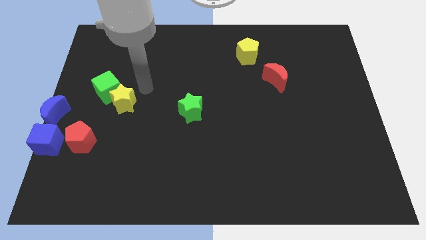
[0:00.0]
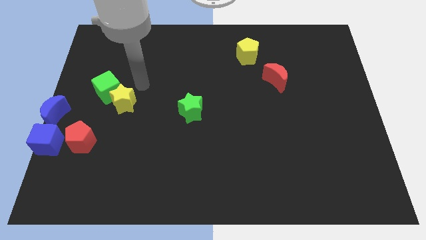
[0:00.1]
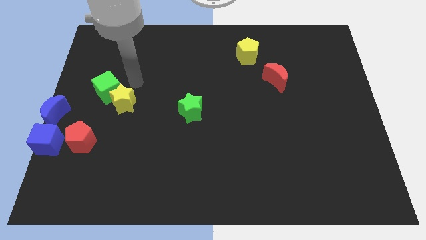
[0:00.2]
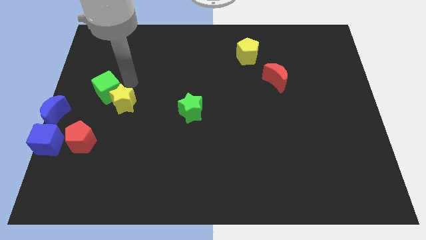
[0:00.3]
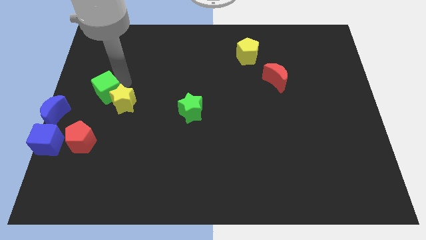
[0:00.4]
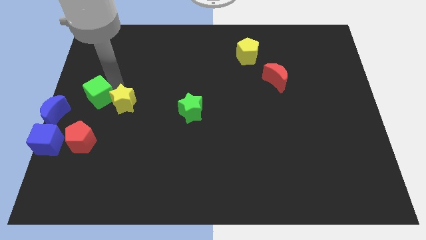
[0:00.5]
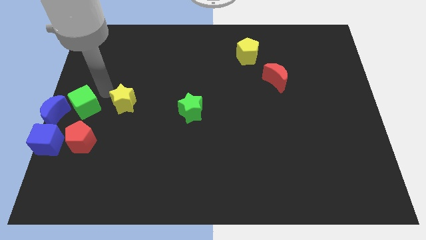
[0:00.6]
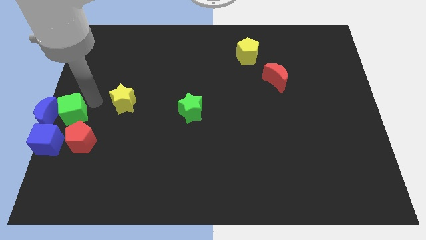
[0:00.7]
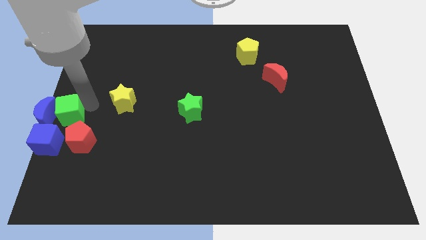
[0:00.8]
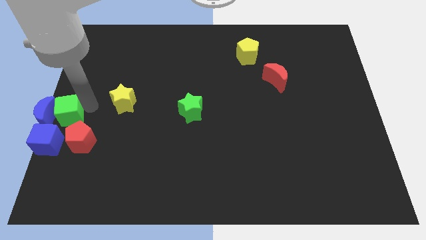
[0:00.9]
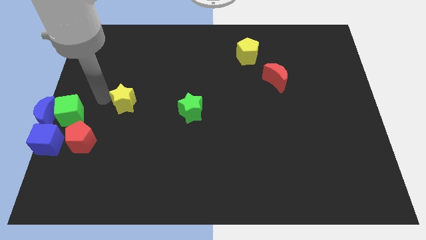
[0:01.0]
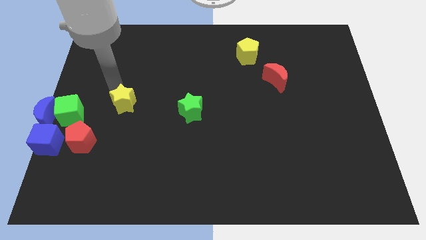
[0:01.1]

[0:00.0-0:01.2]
push the green cube into blue moon

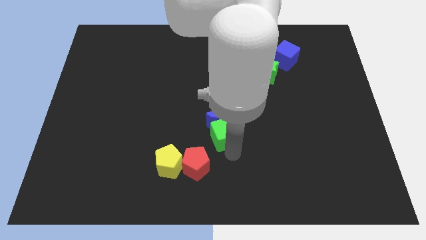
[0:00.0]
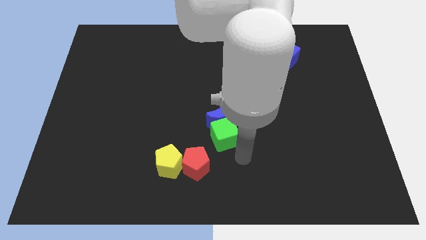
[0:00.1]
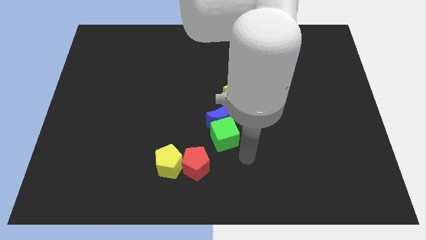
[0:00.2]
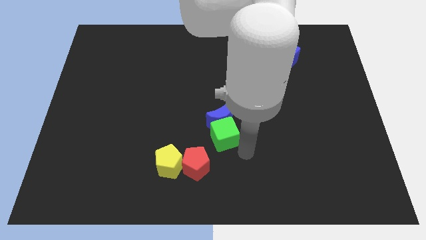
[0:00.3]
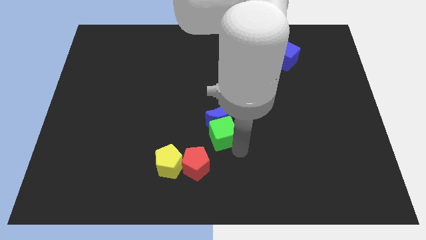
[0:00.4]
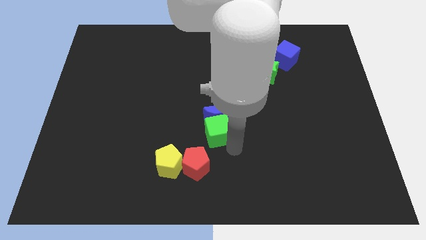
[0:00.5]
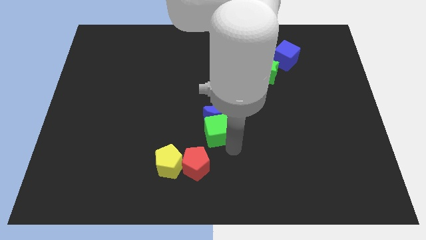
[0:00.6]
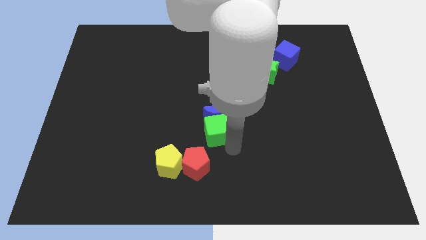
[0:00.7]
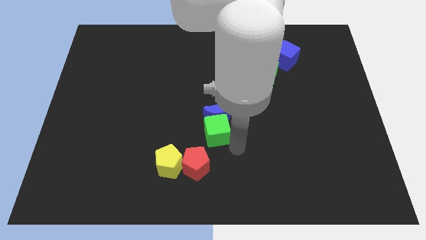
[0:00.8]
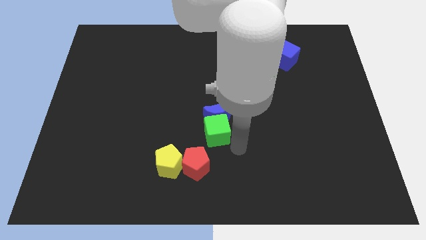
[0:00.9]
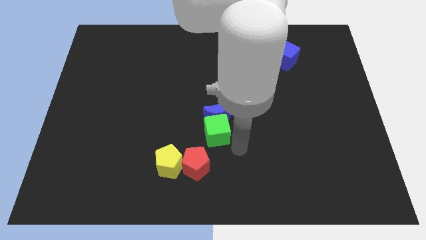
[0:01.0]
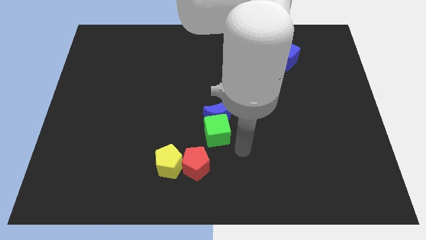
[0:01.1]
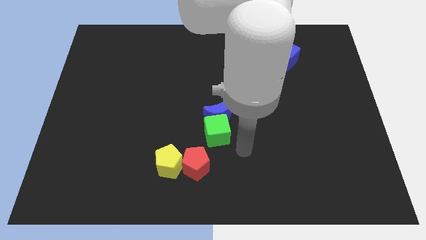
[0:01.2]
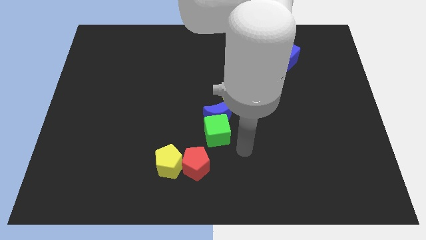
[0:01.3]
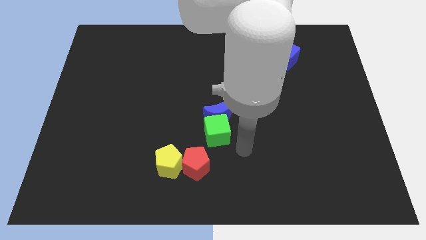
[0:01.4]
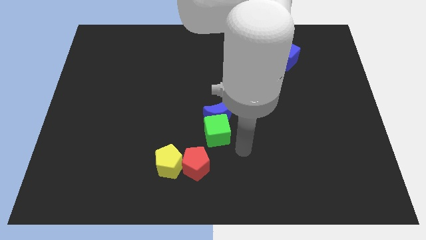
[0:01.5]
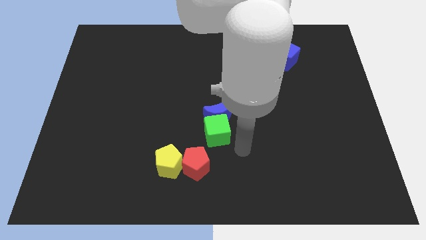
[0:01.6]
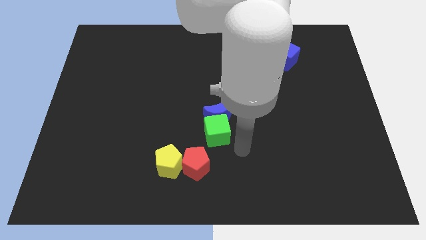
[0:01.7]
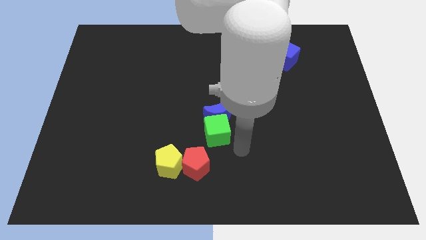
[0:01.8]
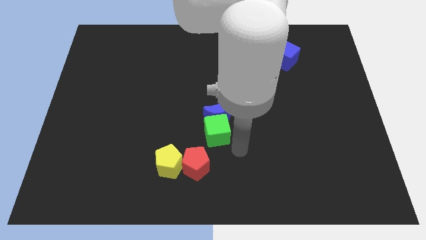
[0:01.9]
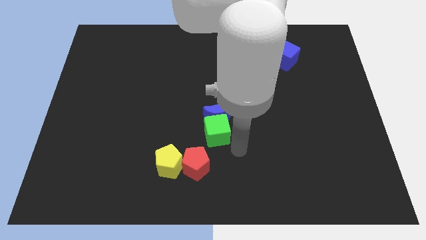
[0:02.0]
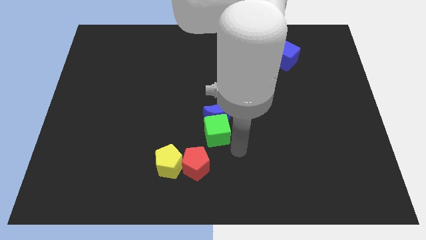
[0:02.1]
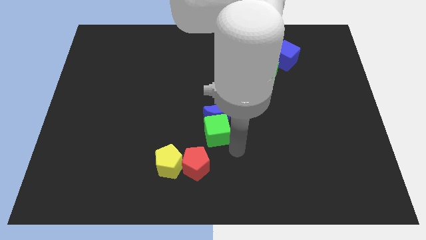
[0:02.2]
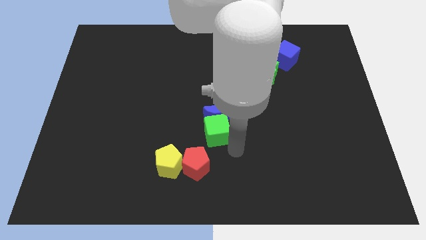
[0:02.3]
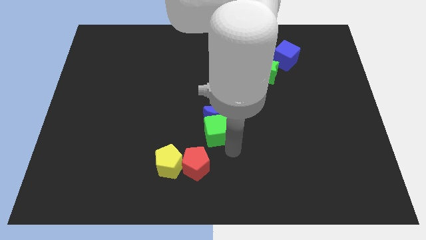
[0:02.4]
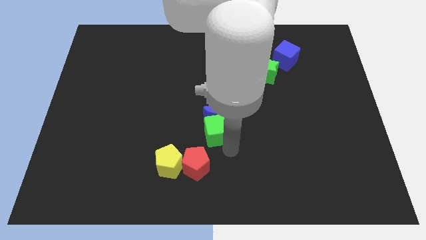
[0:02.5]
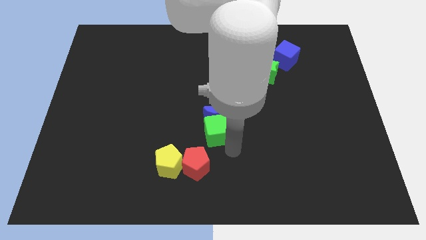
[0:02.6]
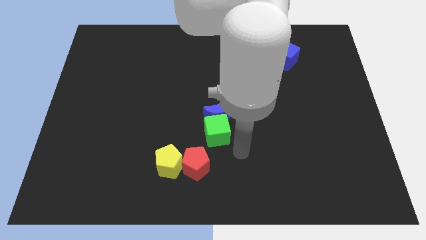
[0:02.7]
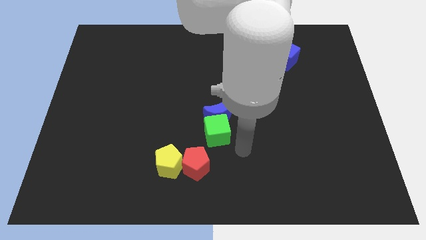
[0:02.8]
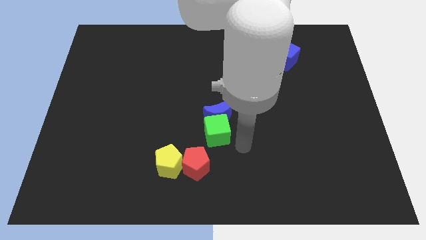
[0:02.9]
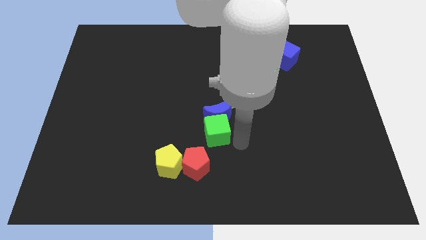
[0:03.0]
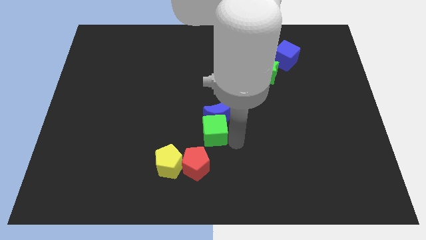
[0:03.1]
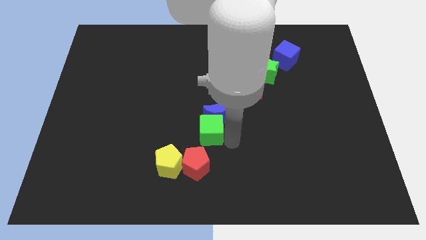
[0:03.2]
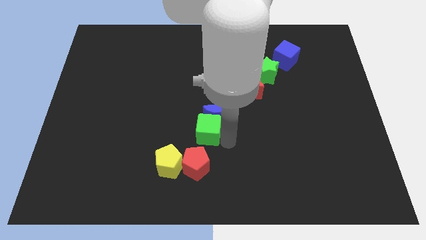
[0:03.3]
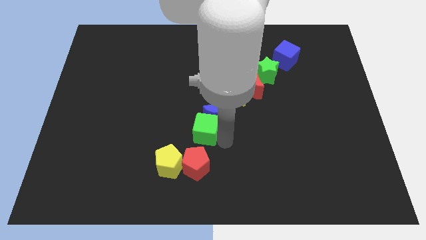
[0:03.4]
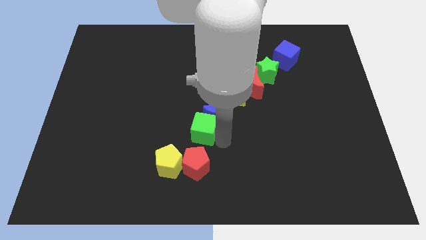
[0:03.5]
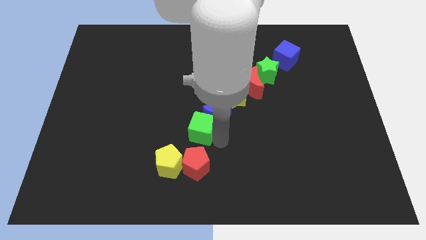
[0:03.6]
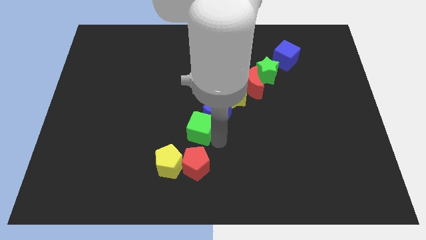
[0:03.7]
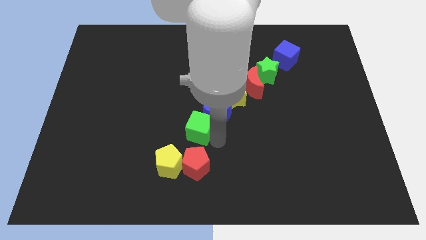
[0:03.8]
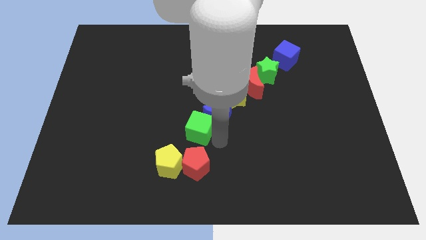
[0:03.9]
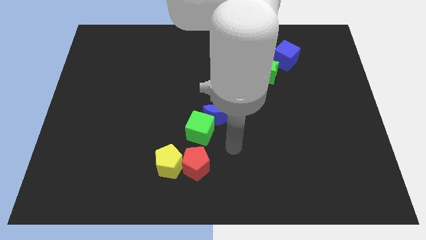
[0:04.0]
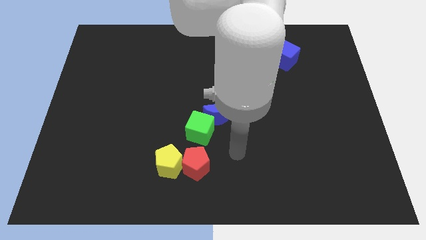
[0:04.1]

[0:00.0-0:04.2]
place green cube down to the blue crescent

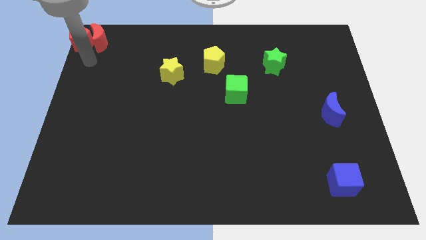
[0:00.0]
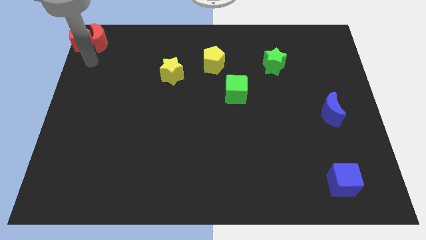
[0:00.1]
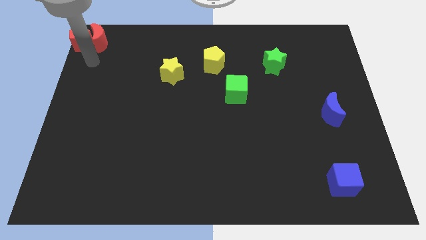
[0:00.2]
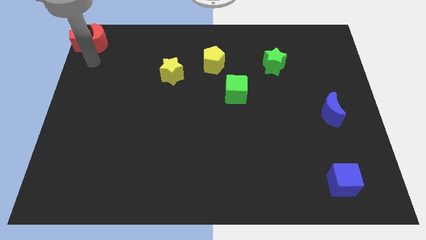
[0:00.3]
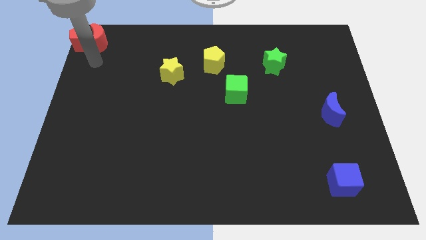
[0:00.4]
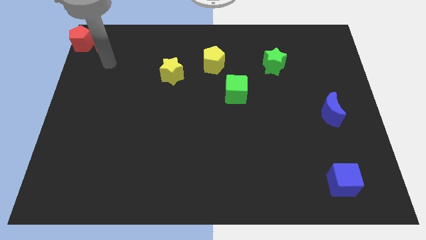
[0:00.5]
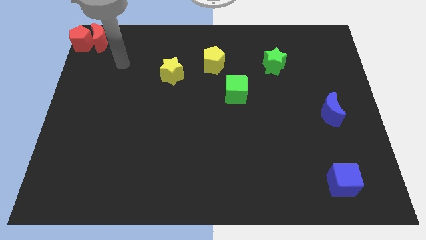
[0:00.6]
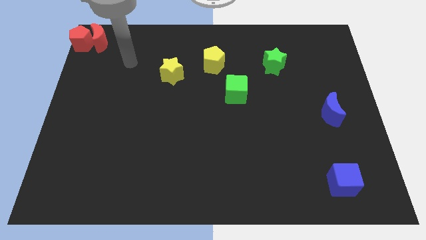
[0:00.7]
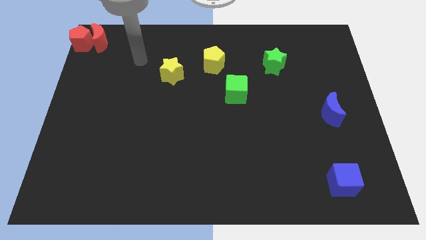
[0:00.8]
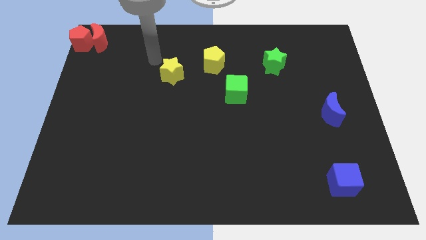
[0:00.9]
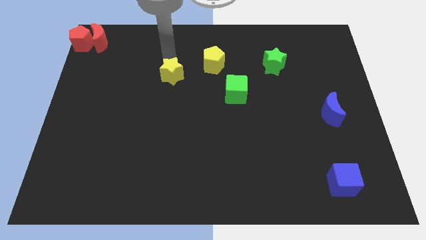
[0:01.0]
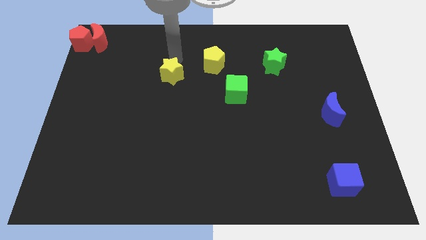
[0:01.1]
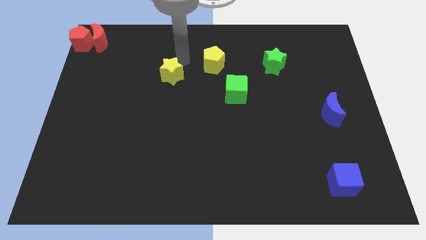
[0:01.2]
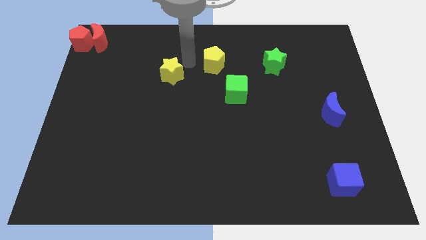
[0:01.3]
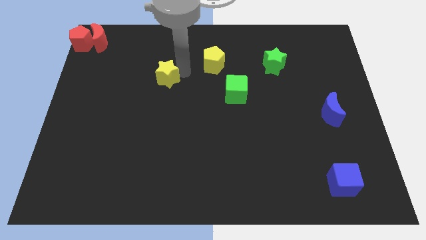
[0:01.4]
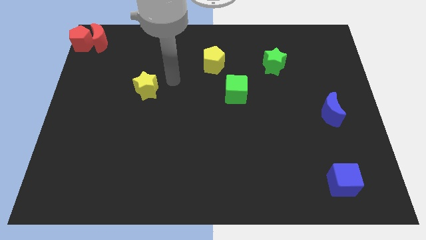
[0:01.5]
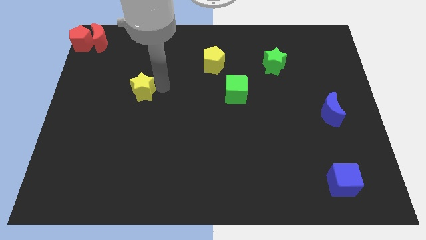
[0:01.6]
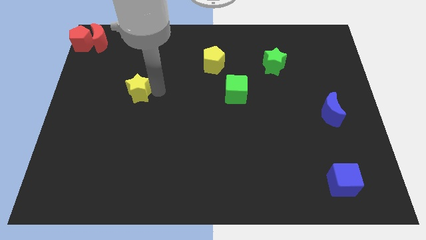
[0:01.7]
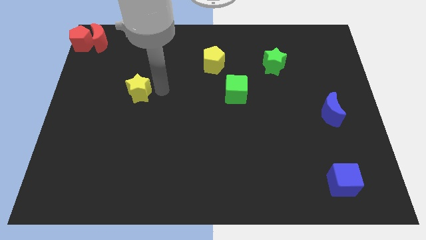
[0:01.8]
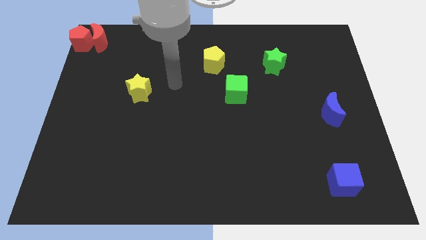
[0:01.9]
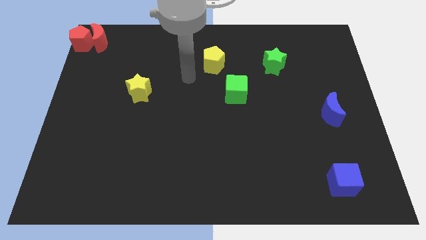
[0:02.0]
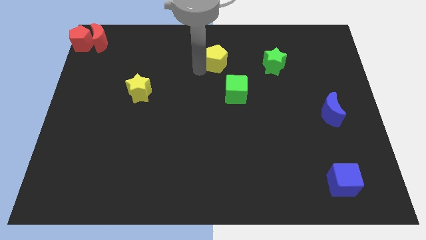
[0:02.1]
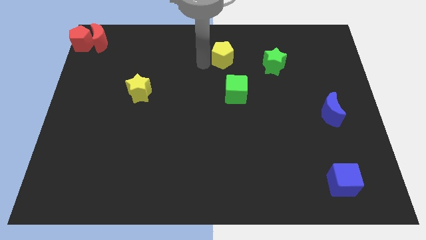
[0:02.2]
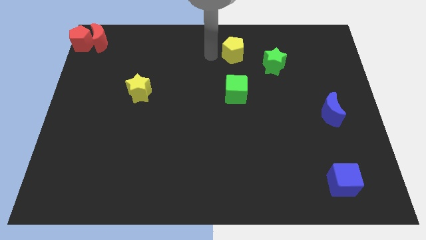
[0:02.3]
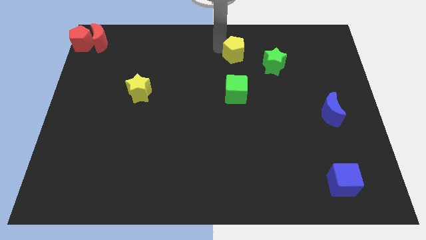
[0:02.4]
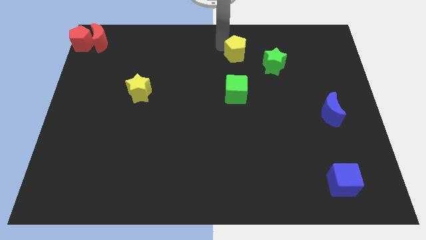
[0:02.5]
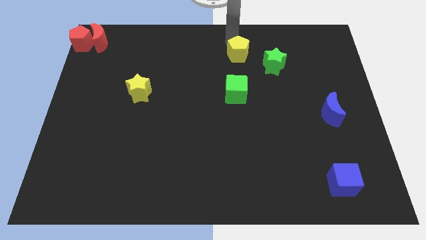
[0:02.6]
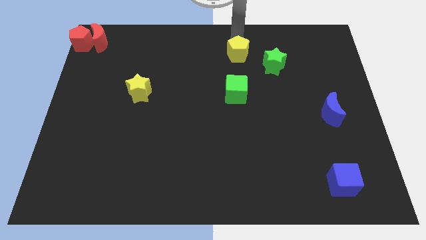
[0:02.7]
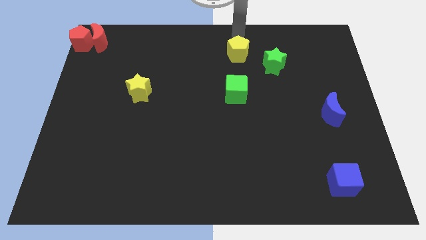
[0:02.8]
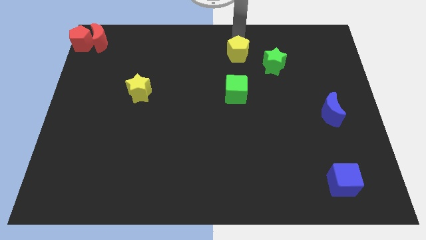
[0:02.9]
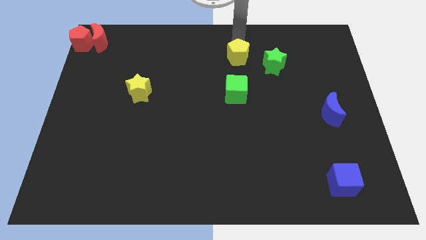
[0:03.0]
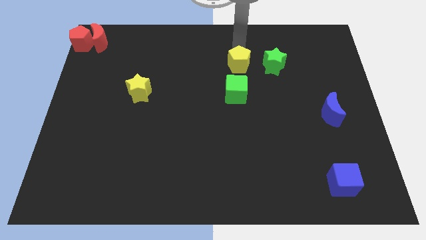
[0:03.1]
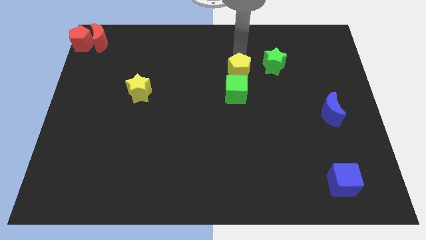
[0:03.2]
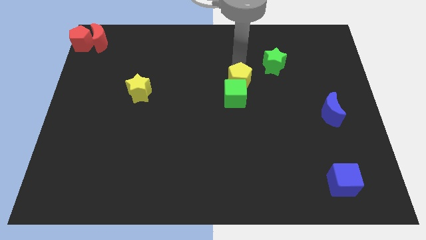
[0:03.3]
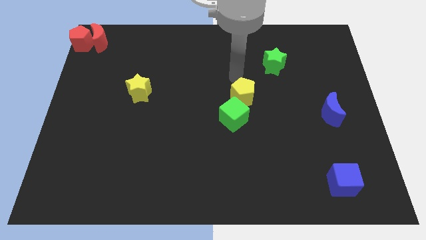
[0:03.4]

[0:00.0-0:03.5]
separate yellow star from yellow pentagon

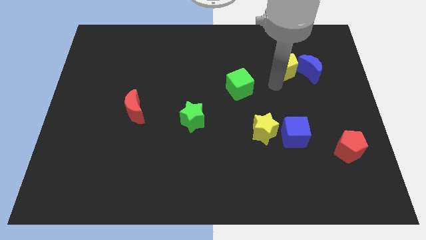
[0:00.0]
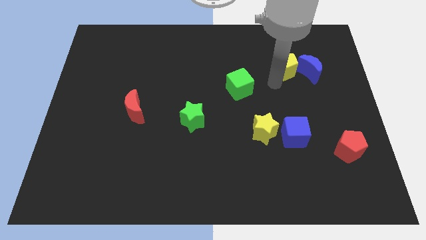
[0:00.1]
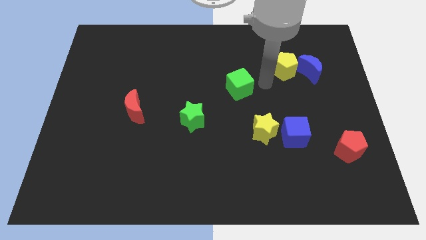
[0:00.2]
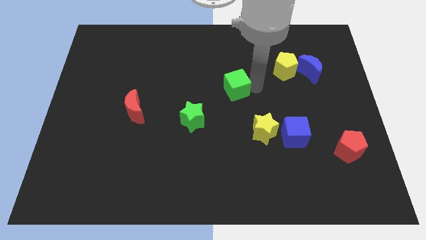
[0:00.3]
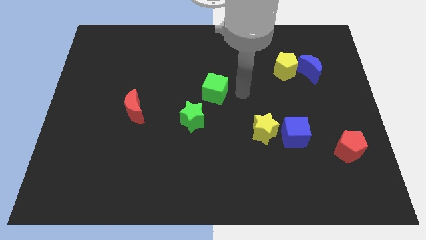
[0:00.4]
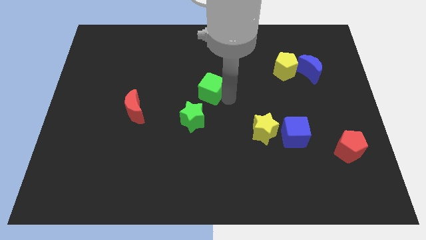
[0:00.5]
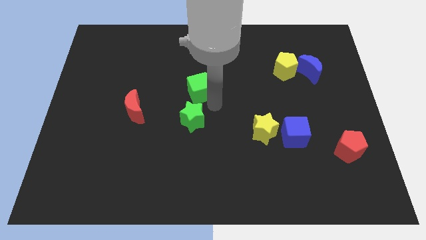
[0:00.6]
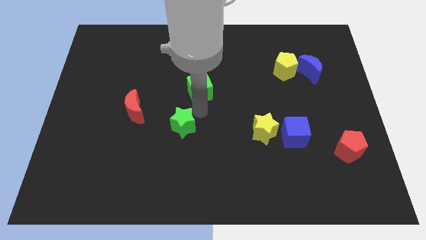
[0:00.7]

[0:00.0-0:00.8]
move the green cube to the top side of the green star
